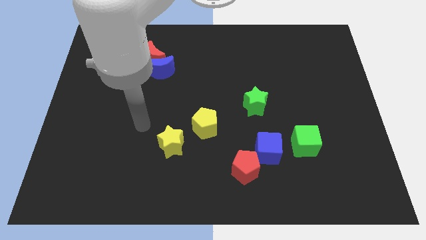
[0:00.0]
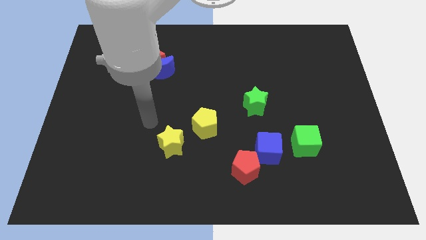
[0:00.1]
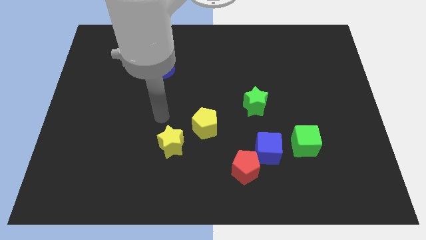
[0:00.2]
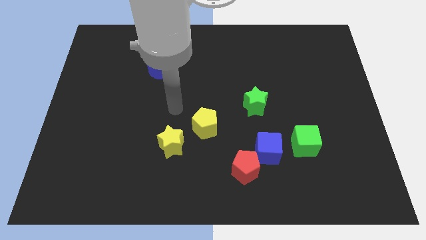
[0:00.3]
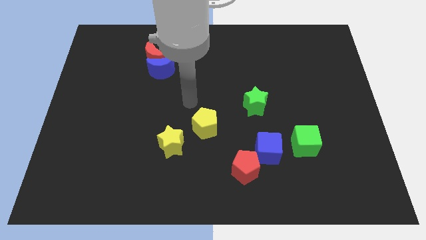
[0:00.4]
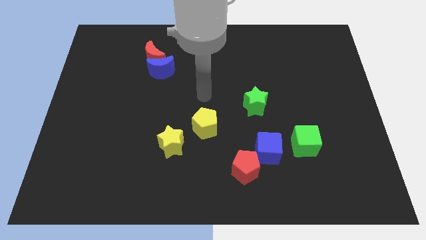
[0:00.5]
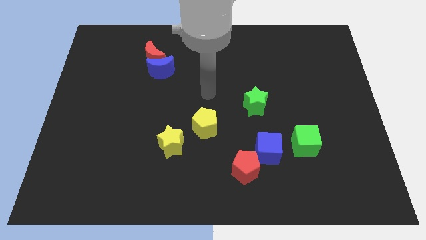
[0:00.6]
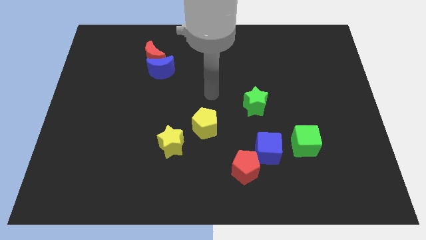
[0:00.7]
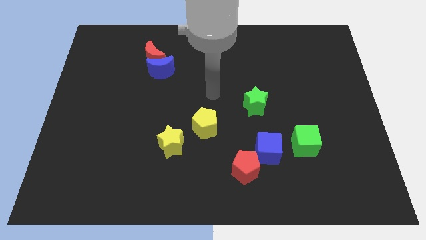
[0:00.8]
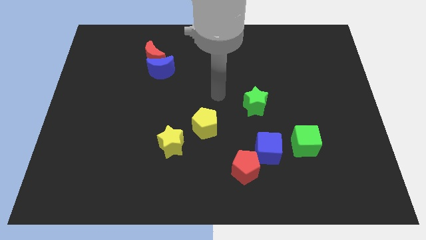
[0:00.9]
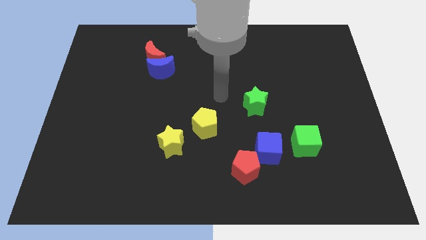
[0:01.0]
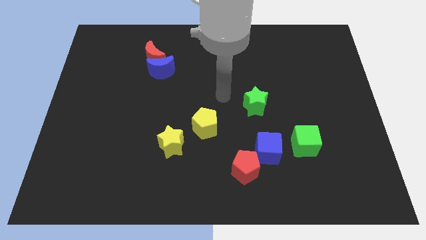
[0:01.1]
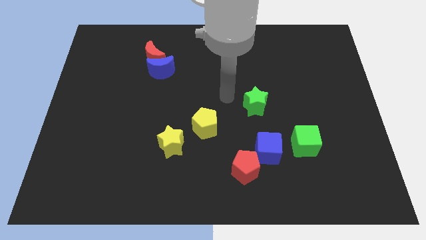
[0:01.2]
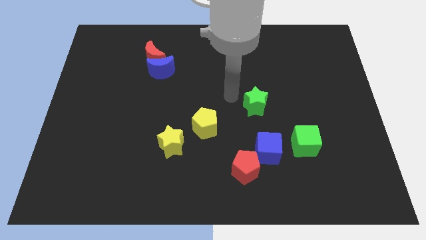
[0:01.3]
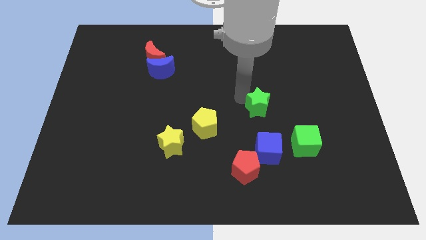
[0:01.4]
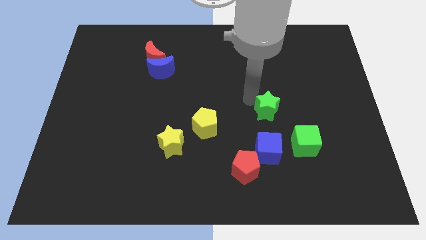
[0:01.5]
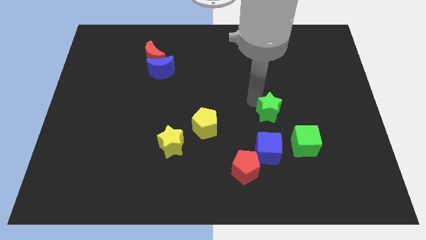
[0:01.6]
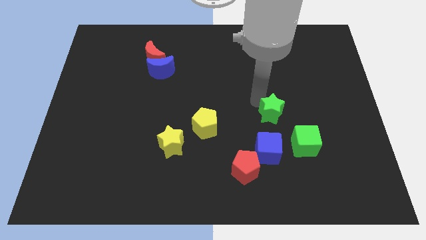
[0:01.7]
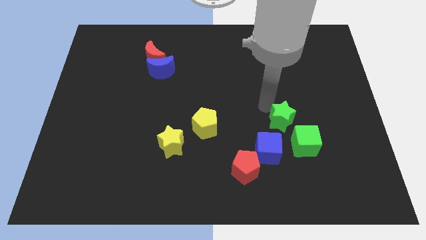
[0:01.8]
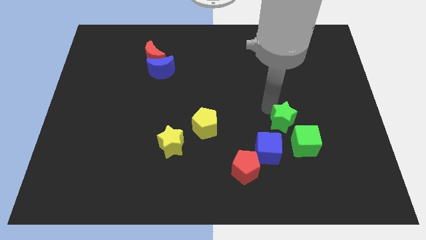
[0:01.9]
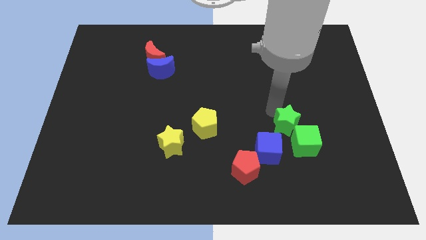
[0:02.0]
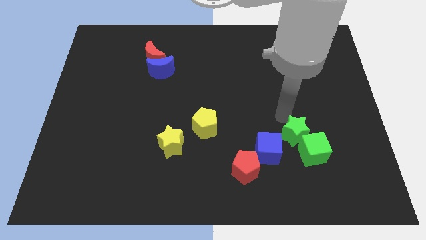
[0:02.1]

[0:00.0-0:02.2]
move the green star into the green cube

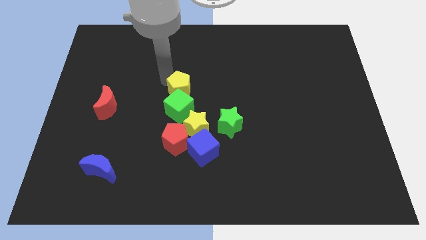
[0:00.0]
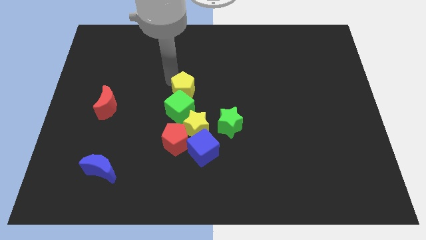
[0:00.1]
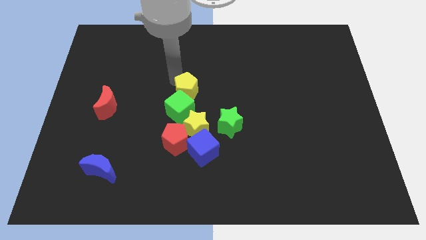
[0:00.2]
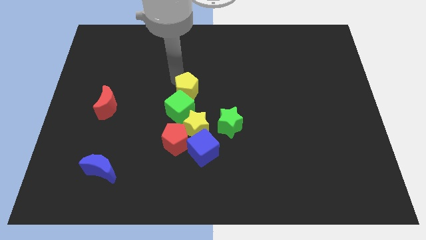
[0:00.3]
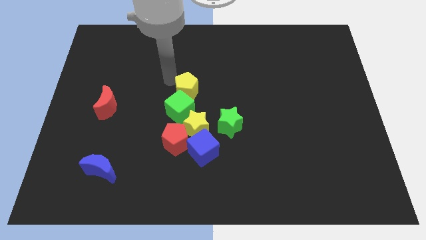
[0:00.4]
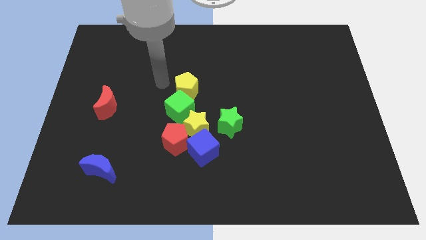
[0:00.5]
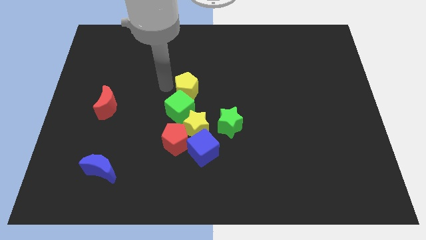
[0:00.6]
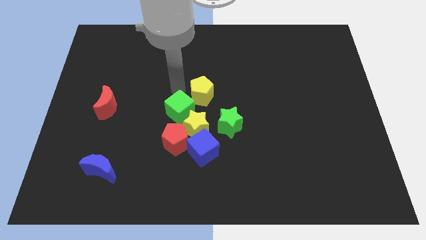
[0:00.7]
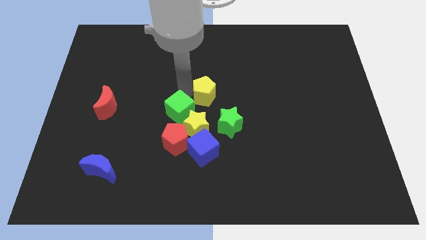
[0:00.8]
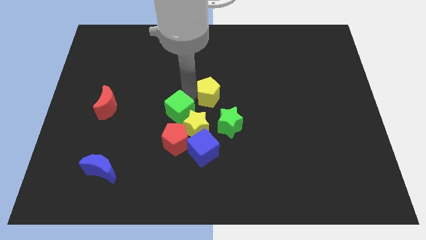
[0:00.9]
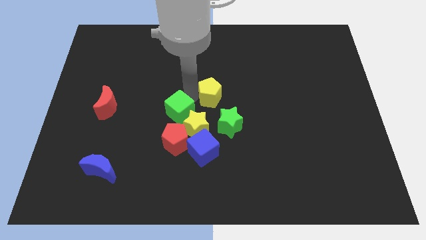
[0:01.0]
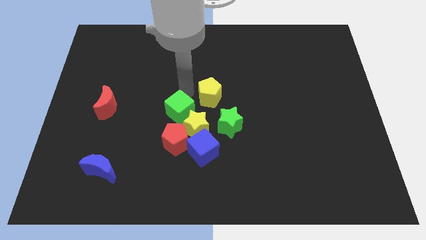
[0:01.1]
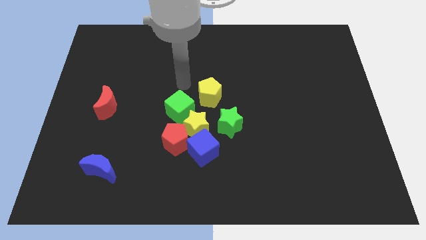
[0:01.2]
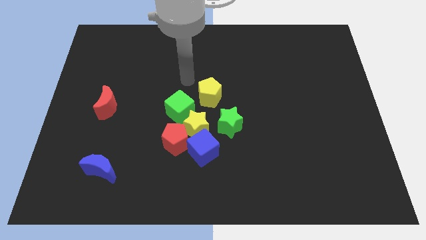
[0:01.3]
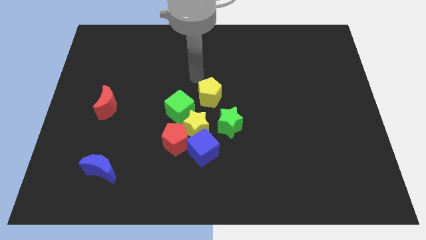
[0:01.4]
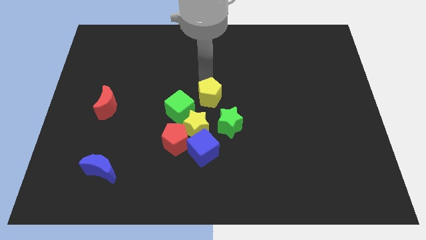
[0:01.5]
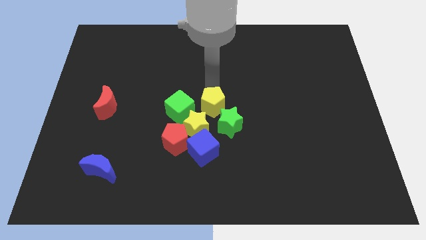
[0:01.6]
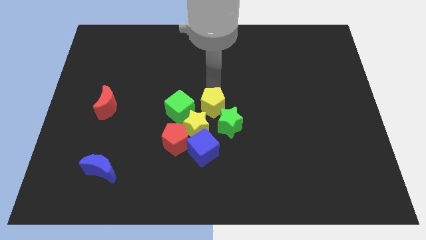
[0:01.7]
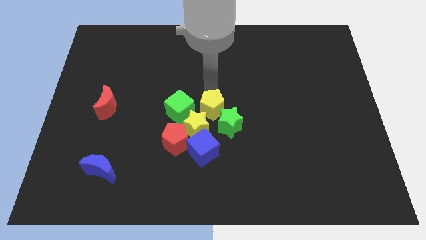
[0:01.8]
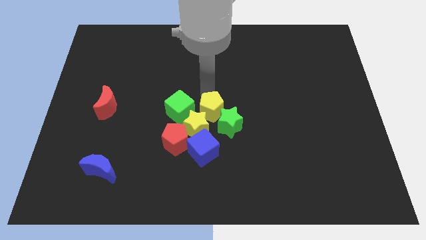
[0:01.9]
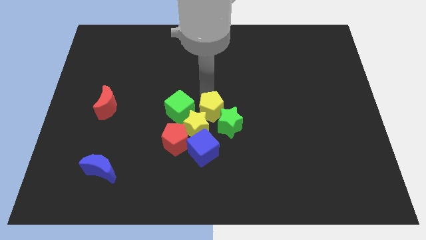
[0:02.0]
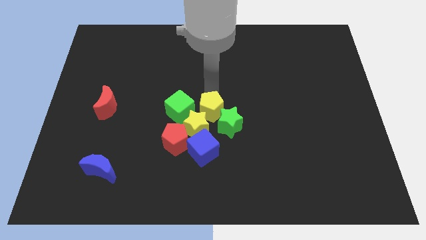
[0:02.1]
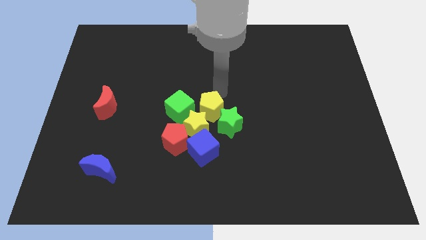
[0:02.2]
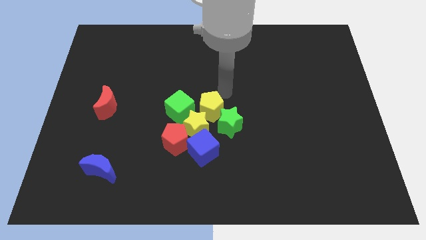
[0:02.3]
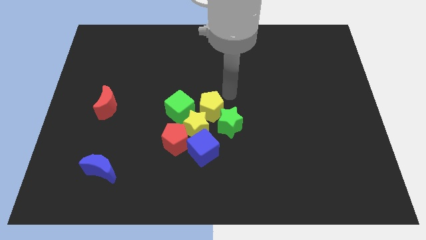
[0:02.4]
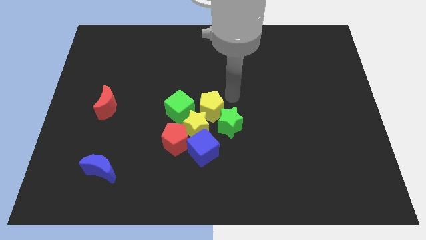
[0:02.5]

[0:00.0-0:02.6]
push yellow pentagon into group of blocks

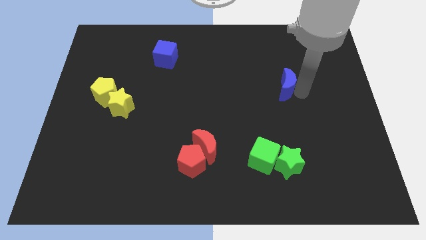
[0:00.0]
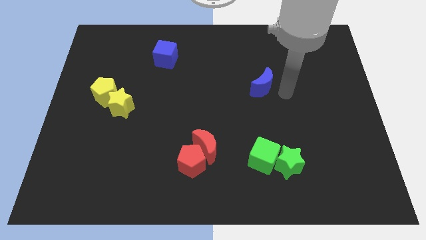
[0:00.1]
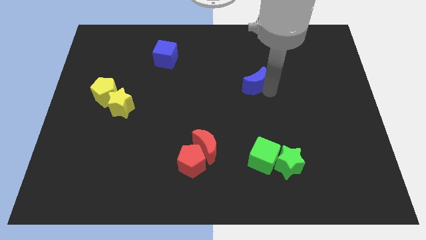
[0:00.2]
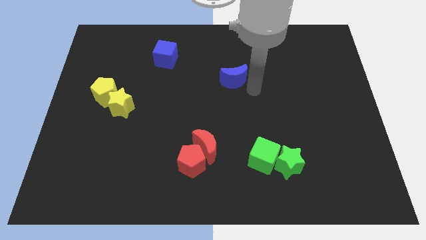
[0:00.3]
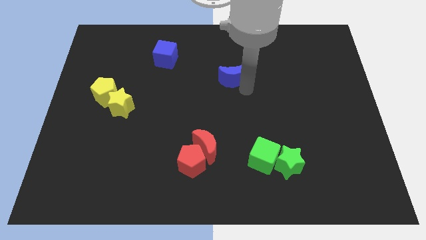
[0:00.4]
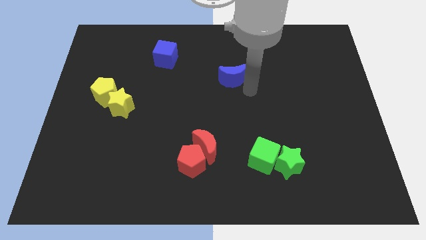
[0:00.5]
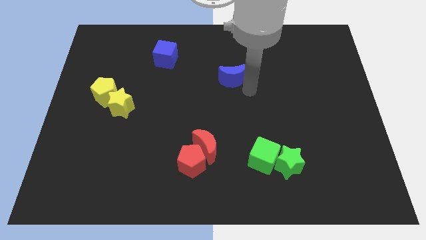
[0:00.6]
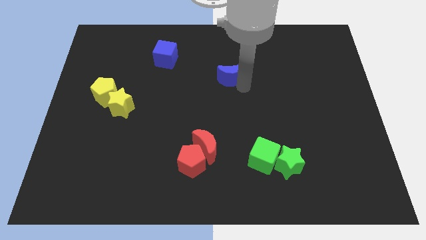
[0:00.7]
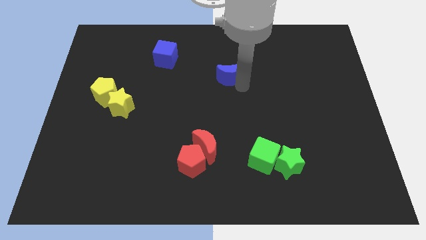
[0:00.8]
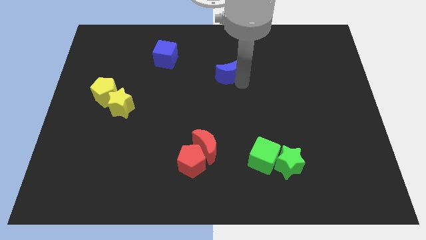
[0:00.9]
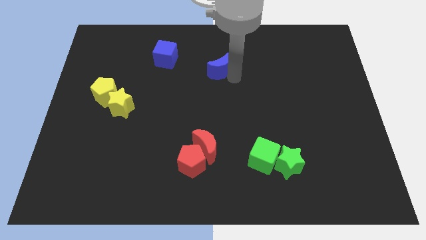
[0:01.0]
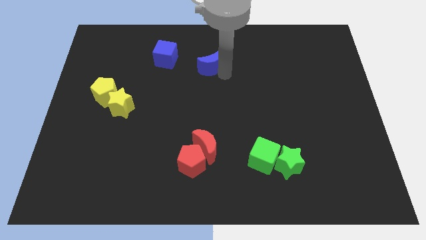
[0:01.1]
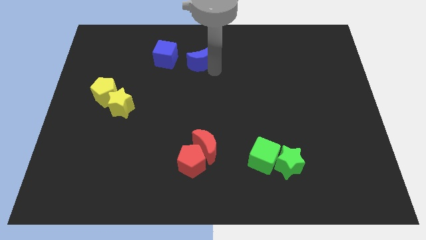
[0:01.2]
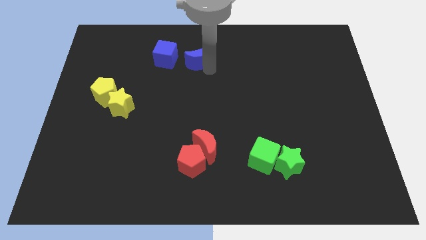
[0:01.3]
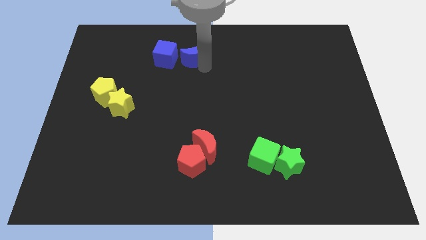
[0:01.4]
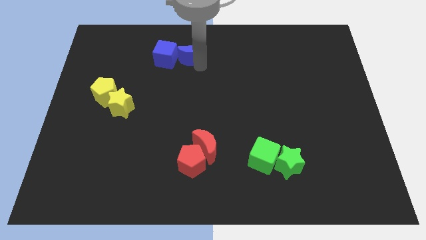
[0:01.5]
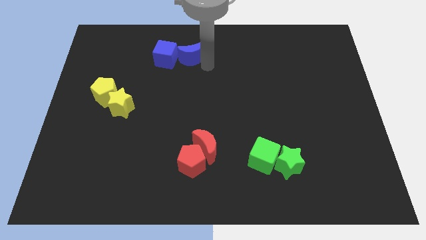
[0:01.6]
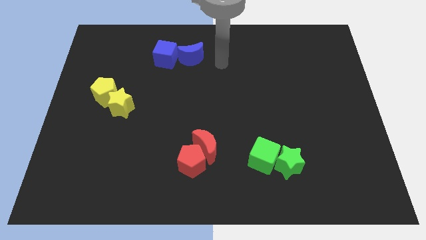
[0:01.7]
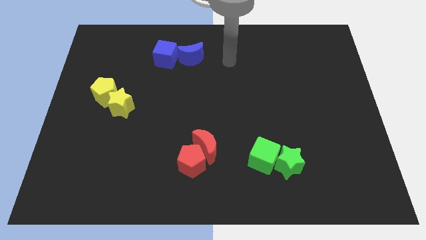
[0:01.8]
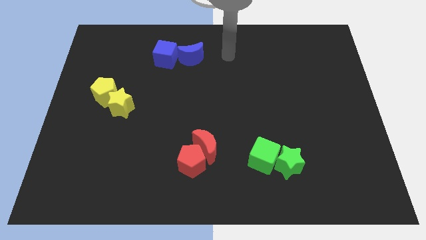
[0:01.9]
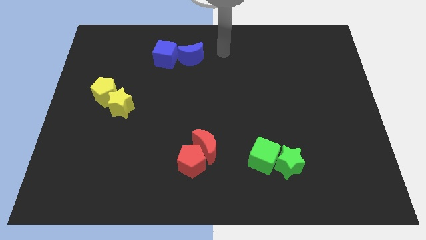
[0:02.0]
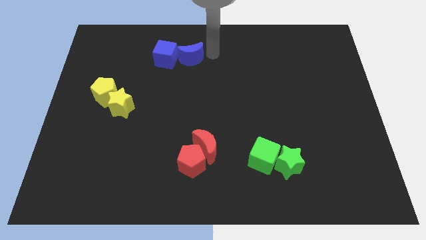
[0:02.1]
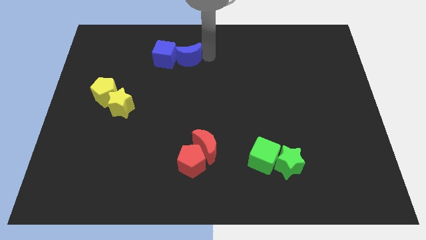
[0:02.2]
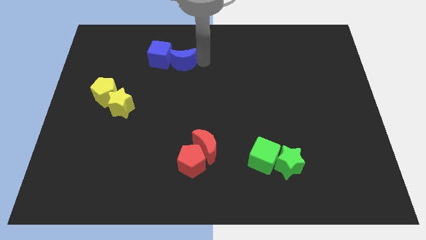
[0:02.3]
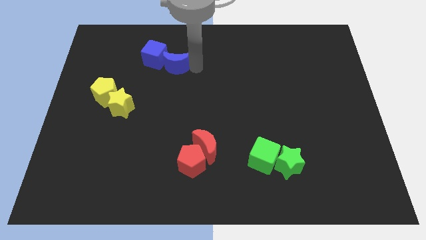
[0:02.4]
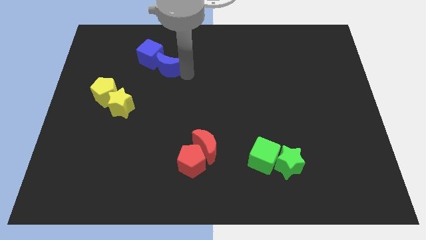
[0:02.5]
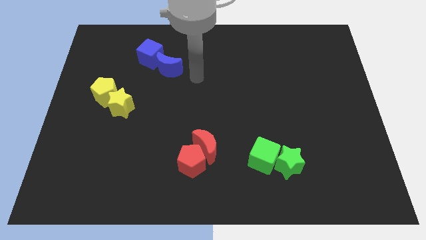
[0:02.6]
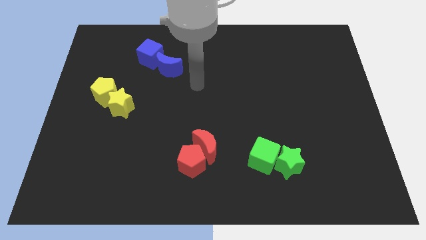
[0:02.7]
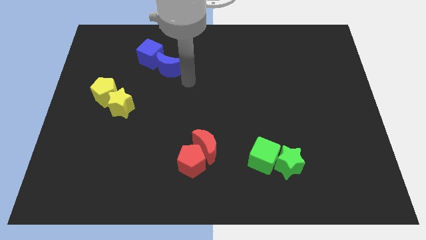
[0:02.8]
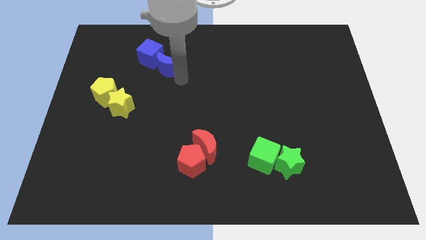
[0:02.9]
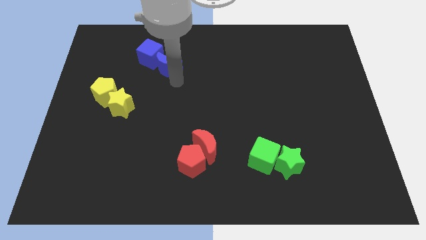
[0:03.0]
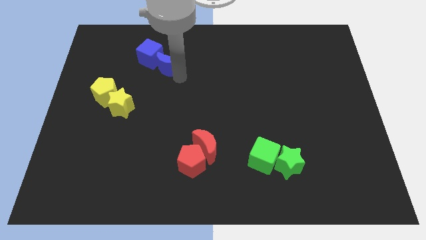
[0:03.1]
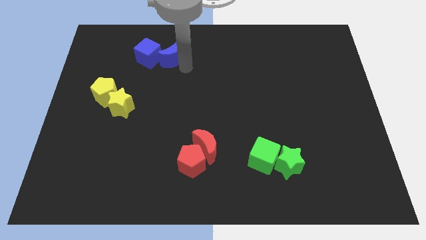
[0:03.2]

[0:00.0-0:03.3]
move blue crescent close to the blue cube

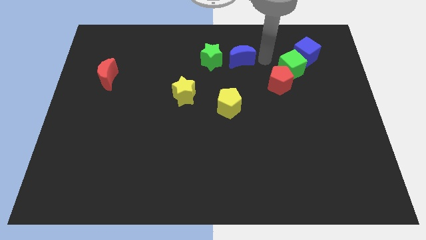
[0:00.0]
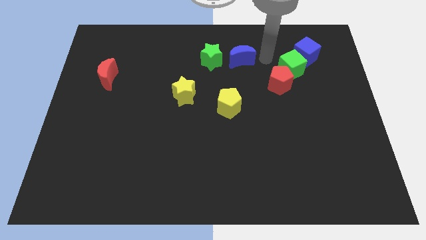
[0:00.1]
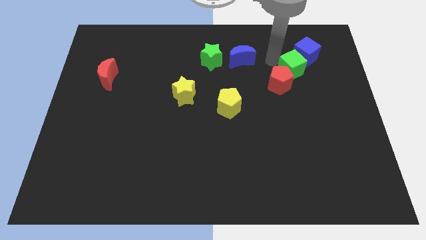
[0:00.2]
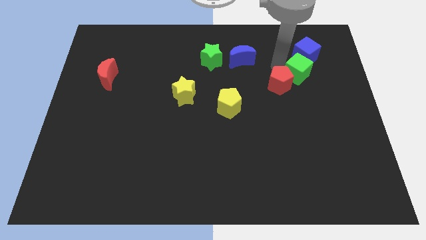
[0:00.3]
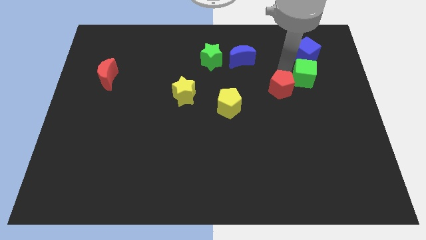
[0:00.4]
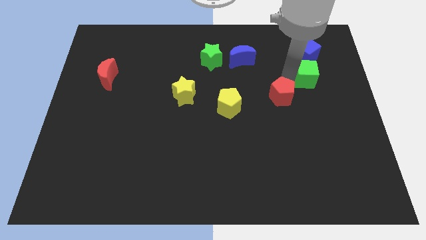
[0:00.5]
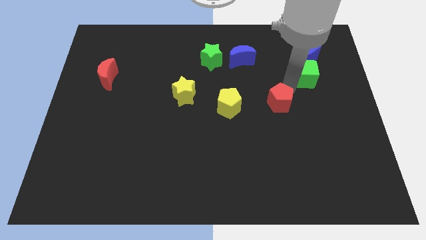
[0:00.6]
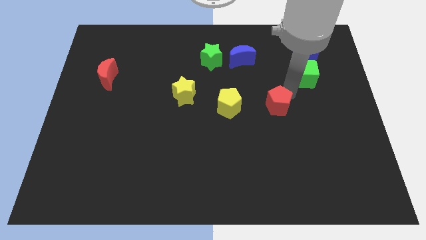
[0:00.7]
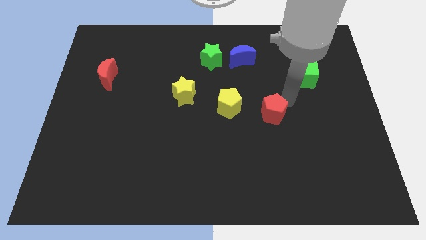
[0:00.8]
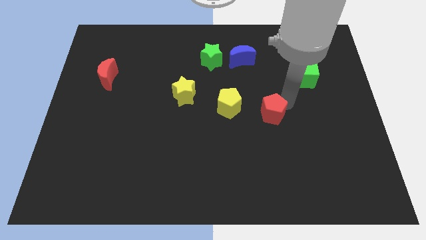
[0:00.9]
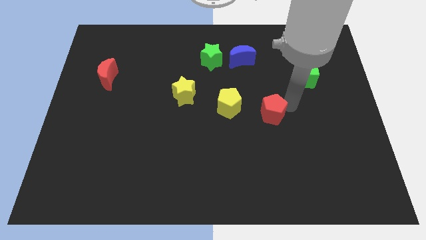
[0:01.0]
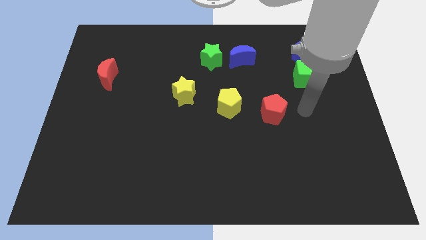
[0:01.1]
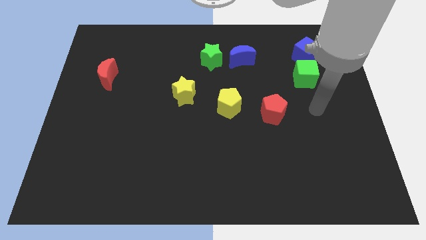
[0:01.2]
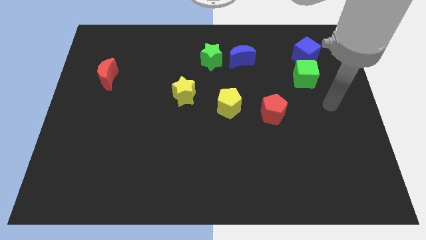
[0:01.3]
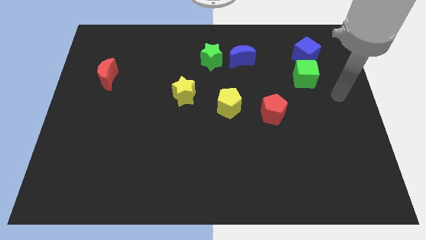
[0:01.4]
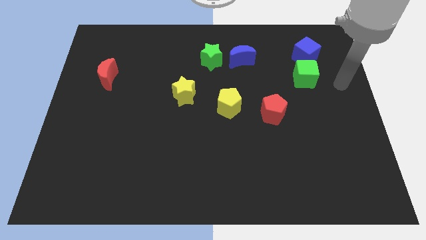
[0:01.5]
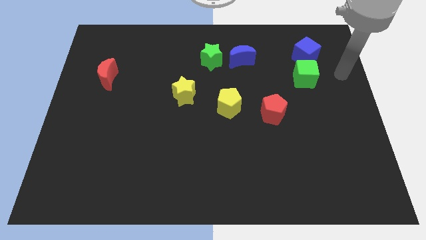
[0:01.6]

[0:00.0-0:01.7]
move the red pentagon towards the yellow pentagon
